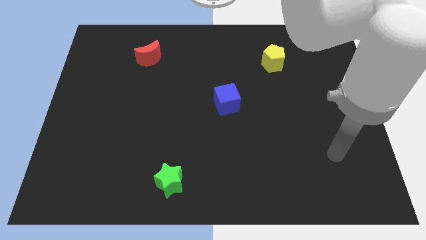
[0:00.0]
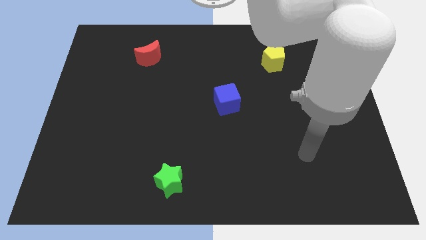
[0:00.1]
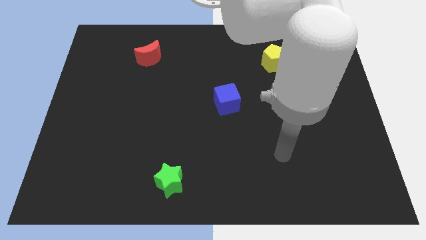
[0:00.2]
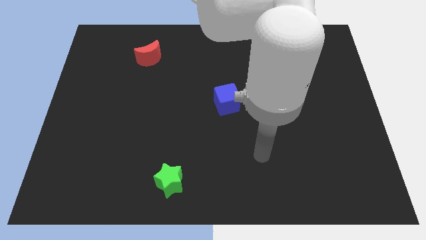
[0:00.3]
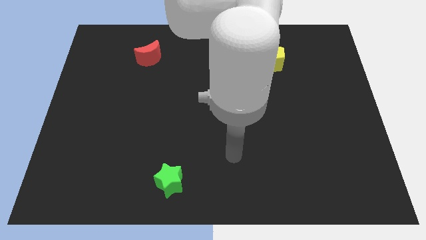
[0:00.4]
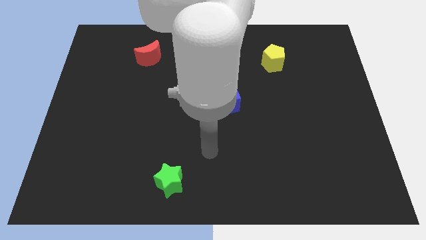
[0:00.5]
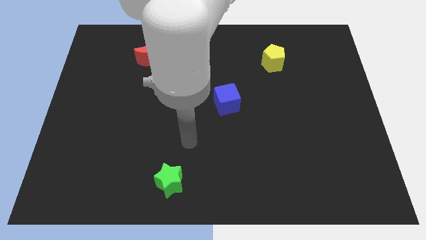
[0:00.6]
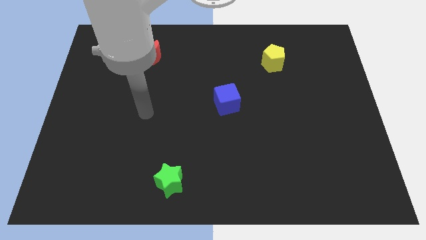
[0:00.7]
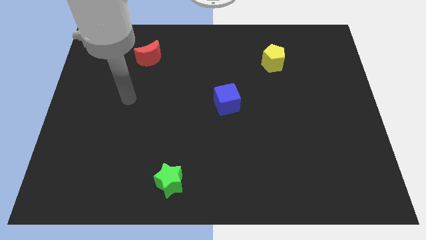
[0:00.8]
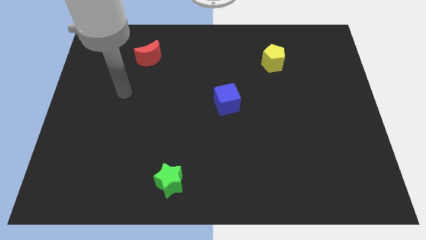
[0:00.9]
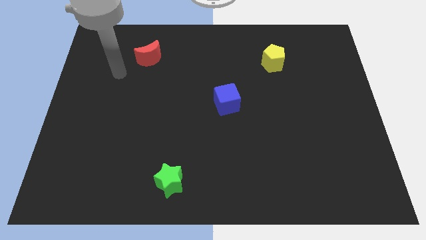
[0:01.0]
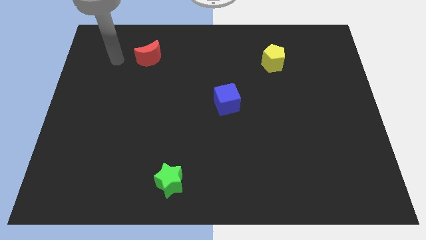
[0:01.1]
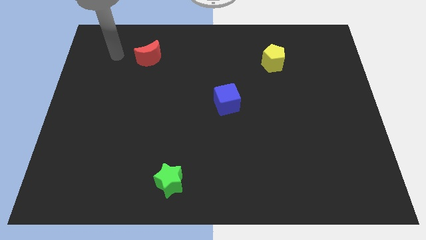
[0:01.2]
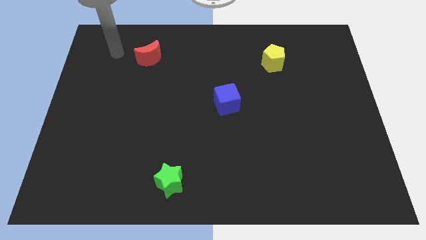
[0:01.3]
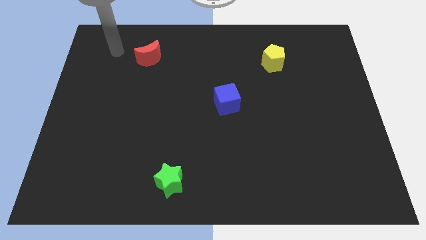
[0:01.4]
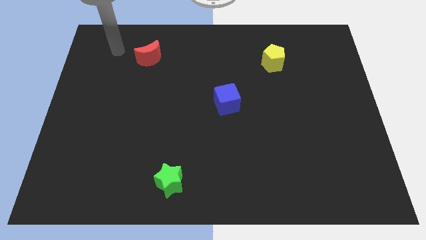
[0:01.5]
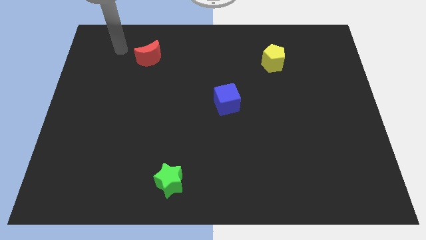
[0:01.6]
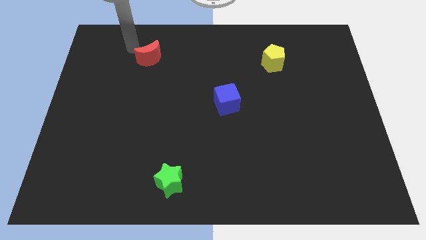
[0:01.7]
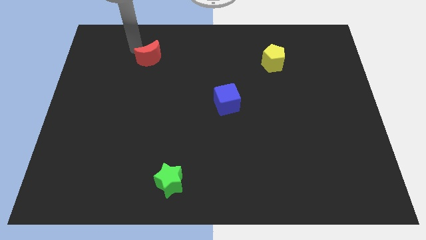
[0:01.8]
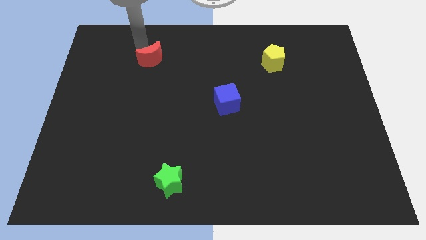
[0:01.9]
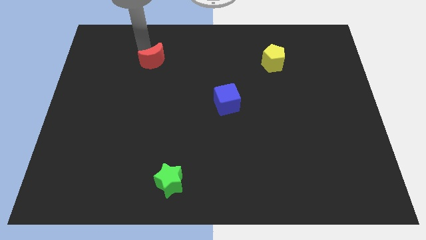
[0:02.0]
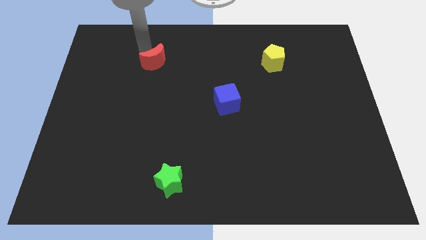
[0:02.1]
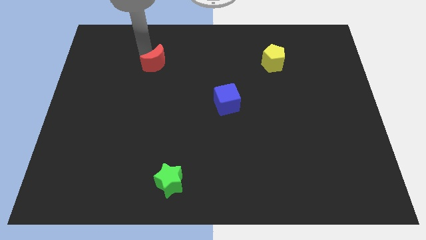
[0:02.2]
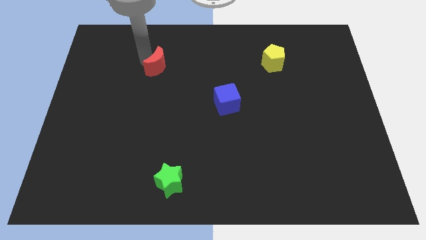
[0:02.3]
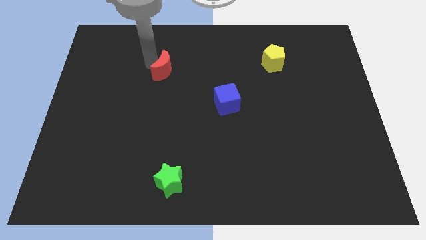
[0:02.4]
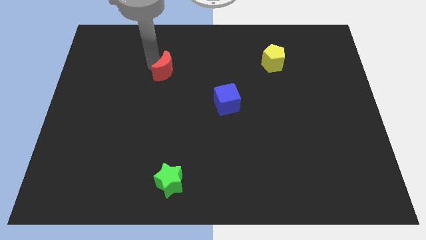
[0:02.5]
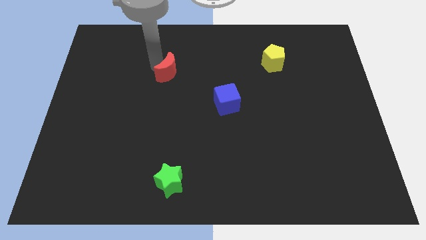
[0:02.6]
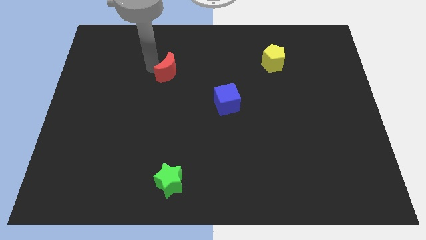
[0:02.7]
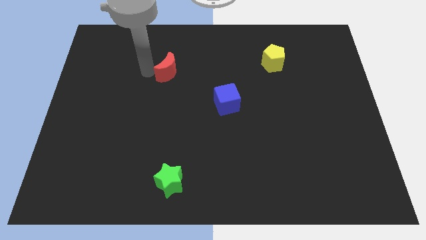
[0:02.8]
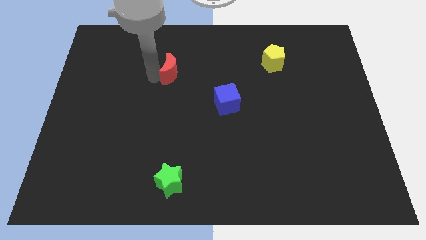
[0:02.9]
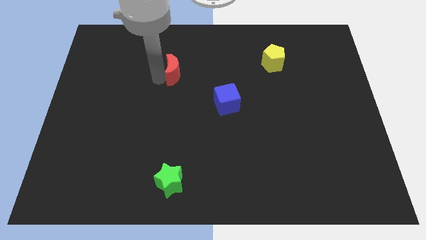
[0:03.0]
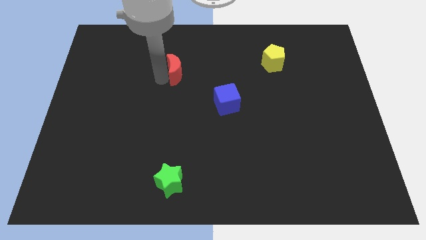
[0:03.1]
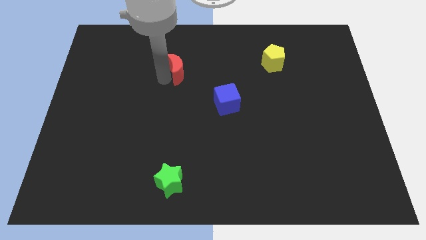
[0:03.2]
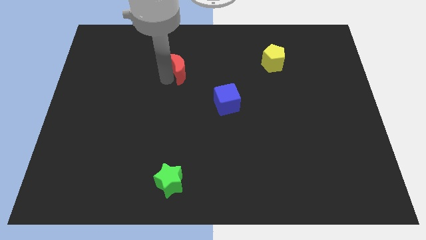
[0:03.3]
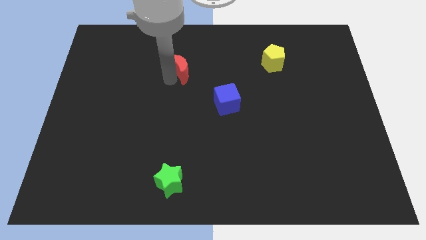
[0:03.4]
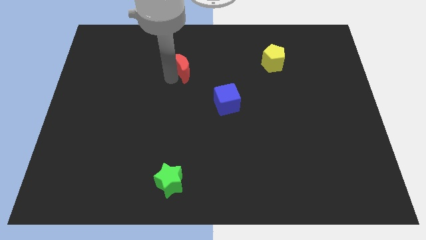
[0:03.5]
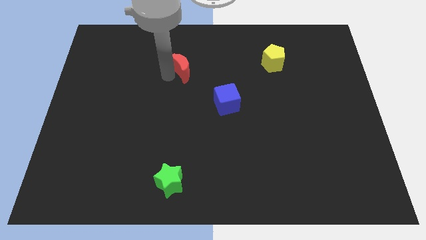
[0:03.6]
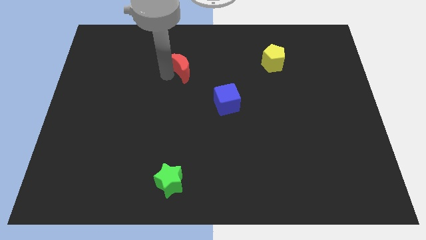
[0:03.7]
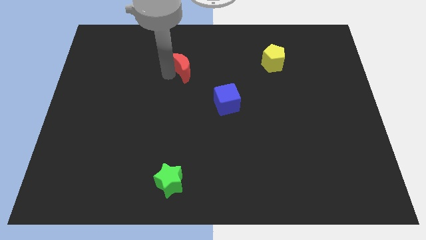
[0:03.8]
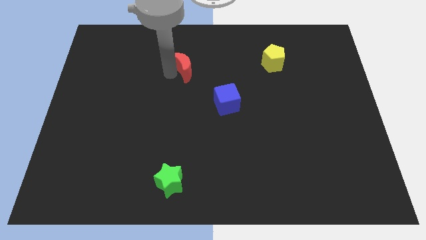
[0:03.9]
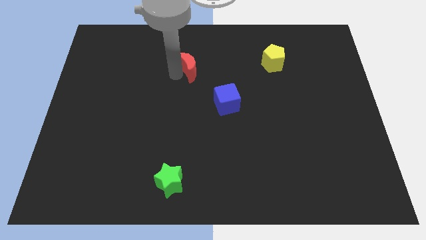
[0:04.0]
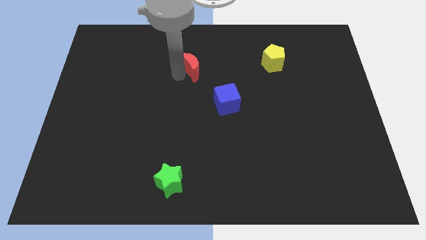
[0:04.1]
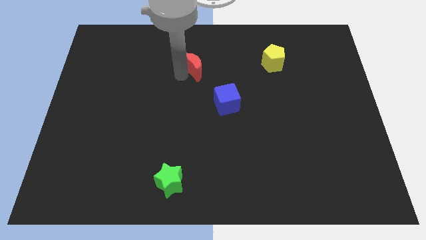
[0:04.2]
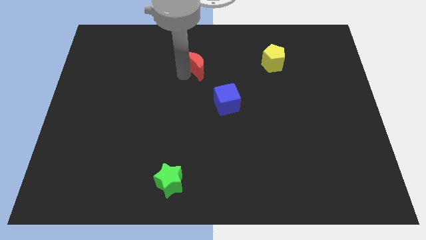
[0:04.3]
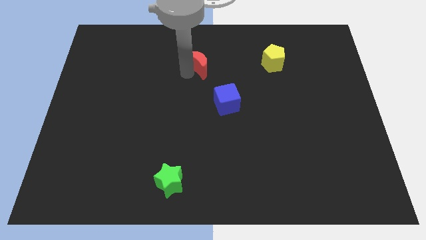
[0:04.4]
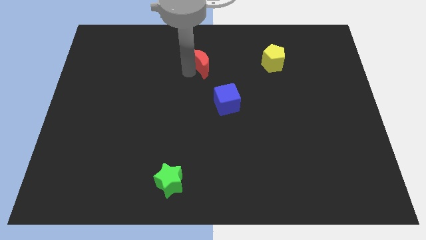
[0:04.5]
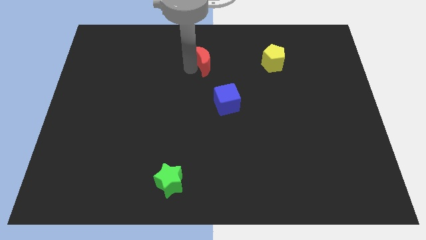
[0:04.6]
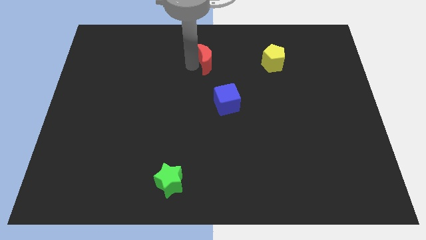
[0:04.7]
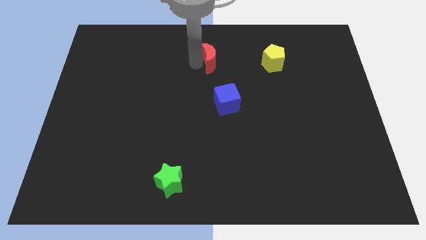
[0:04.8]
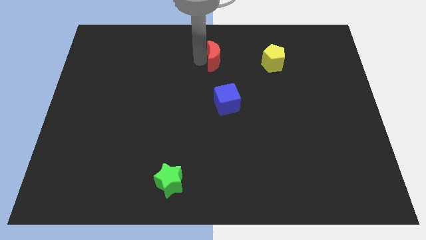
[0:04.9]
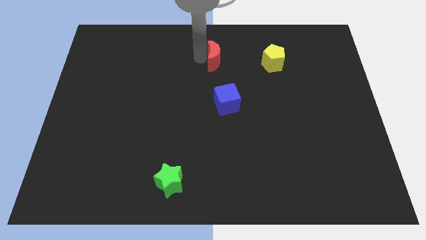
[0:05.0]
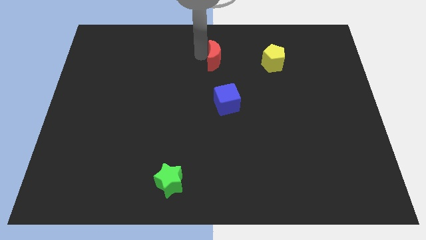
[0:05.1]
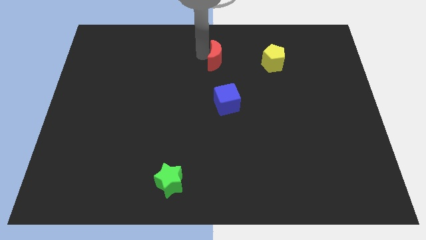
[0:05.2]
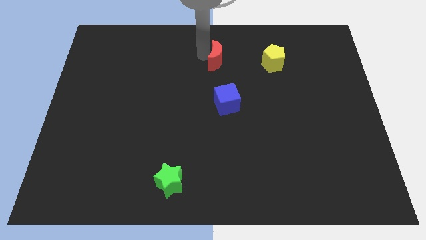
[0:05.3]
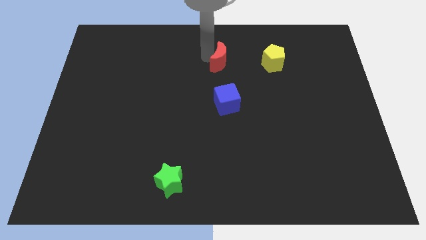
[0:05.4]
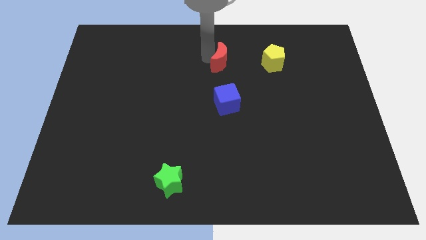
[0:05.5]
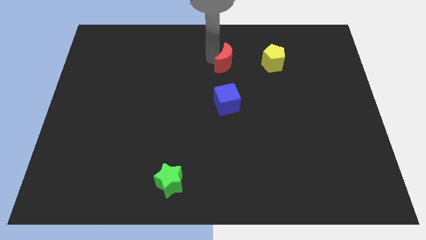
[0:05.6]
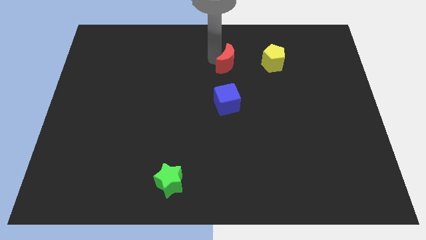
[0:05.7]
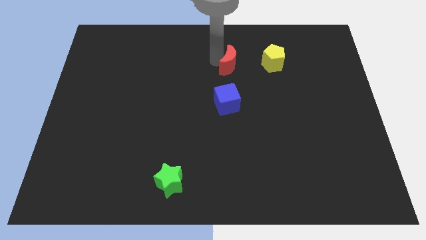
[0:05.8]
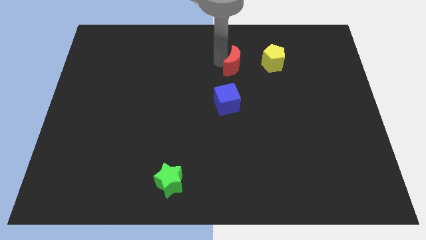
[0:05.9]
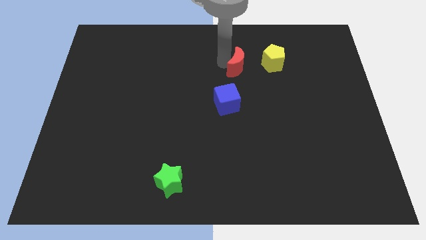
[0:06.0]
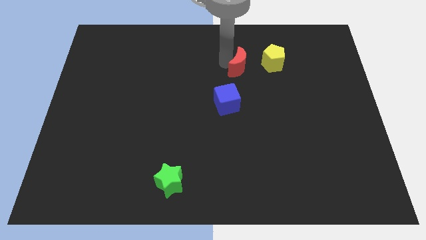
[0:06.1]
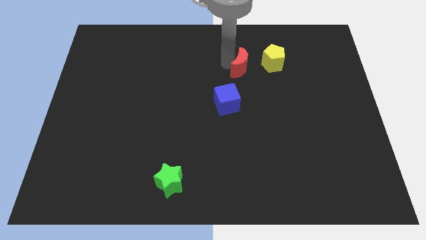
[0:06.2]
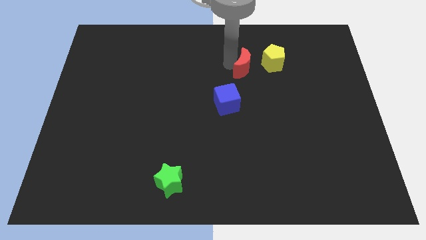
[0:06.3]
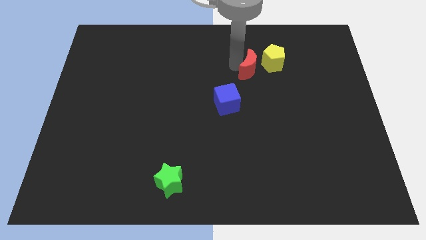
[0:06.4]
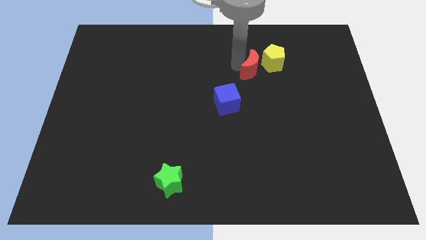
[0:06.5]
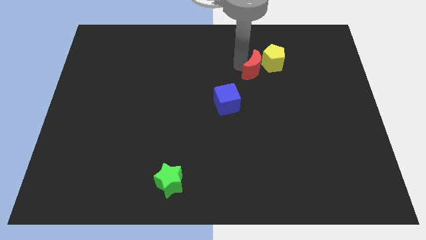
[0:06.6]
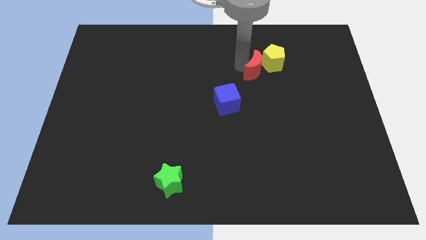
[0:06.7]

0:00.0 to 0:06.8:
put the red moon next to the yellow pentagon

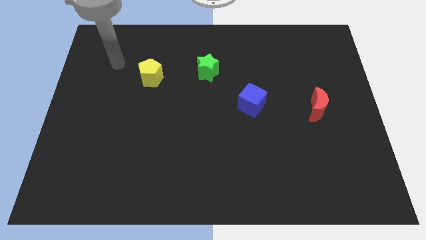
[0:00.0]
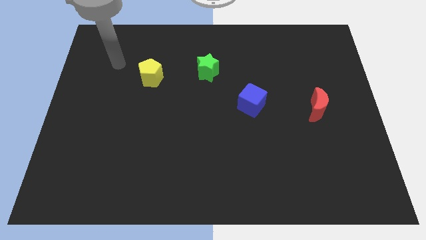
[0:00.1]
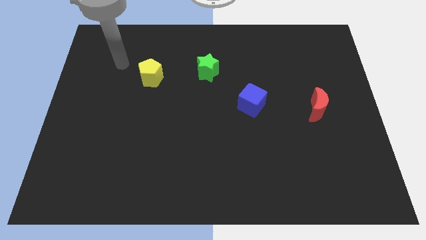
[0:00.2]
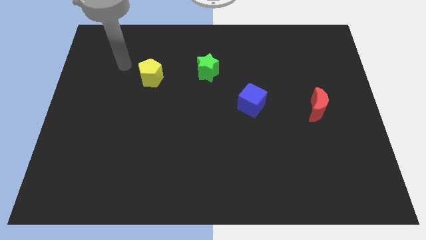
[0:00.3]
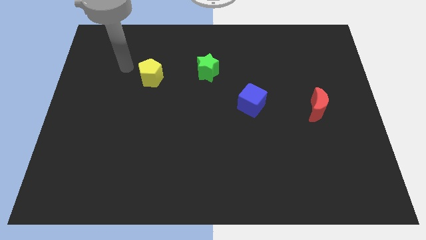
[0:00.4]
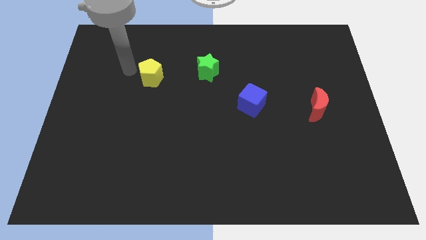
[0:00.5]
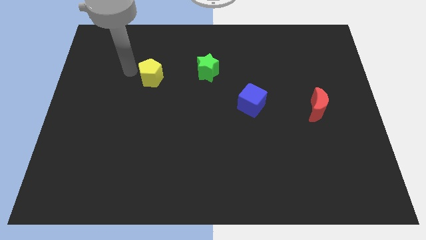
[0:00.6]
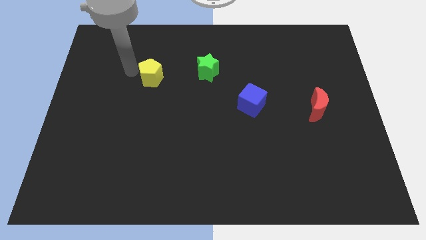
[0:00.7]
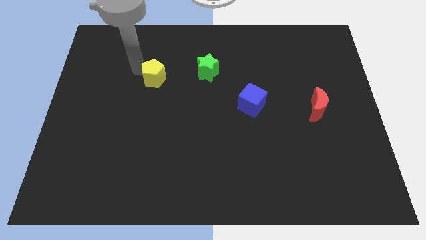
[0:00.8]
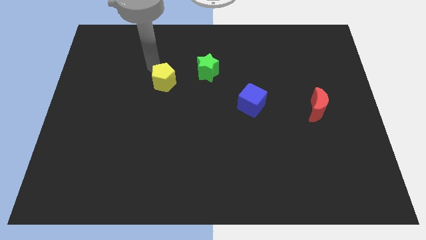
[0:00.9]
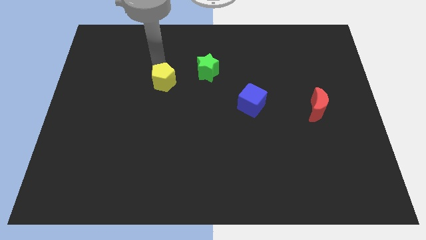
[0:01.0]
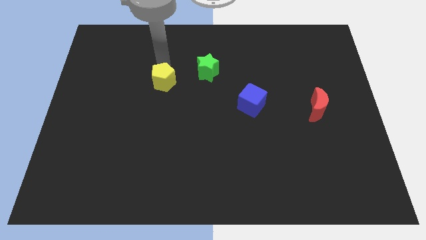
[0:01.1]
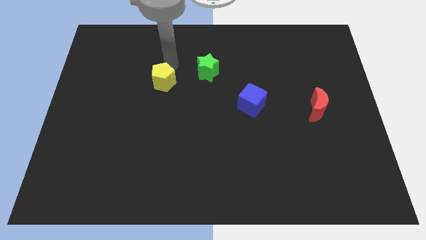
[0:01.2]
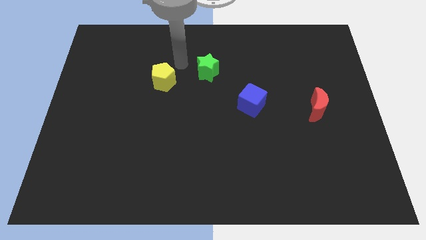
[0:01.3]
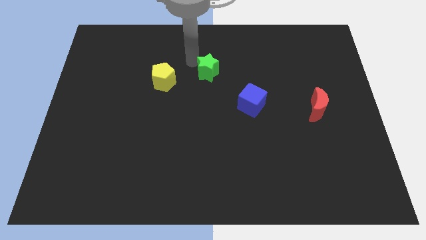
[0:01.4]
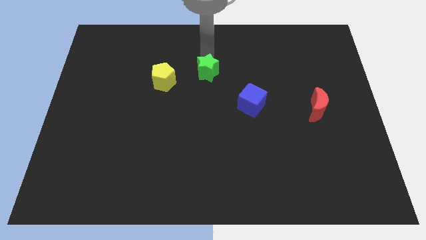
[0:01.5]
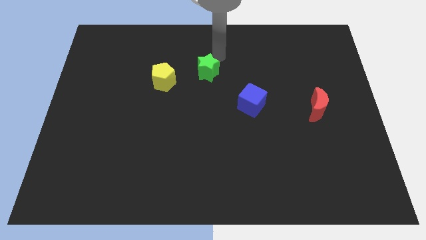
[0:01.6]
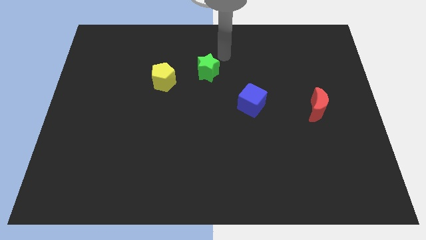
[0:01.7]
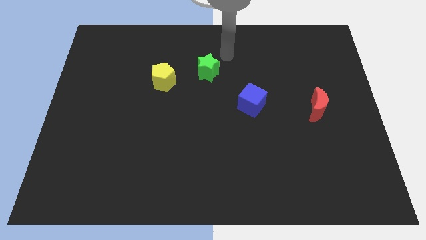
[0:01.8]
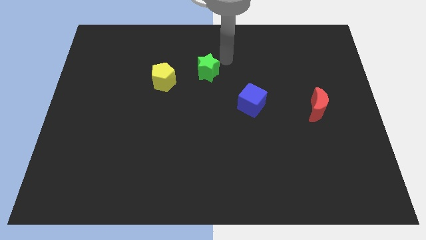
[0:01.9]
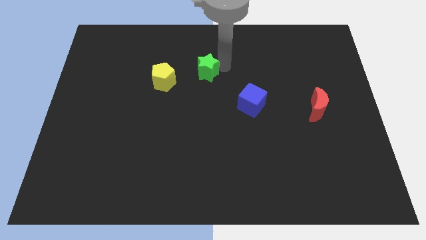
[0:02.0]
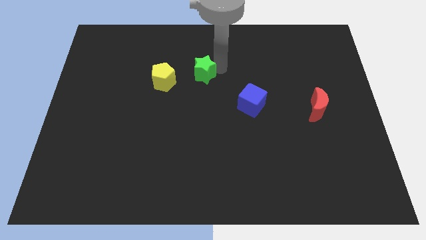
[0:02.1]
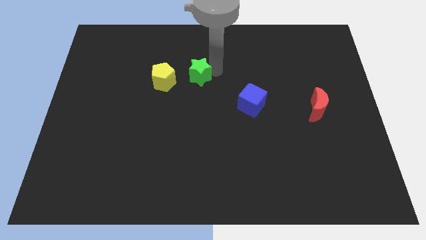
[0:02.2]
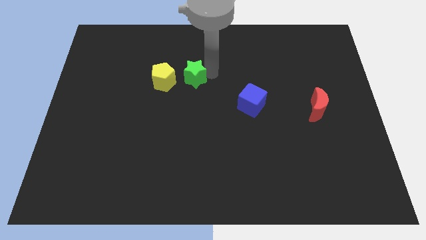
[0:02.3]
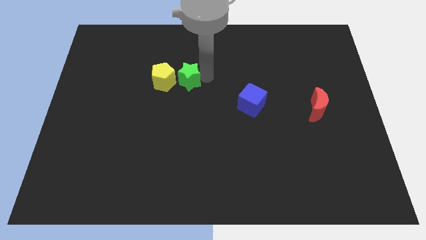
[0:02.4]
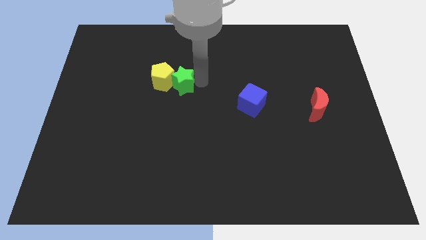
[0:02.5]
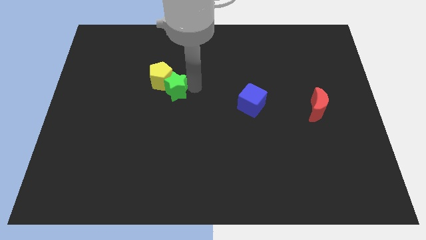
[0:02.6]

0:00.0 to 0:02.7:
slide the star next to the yellow block
